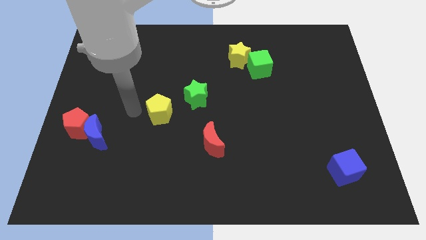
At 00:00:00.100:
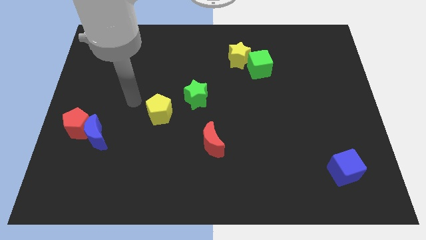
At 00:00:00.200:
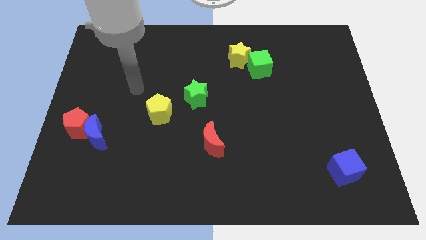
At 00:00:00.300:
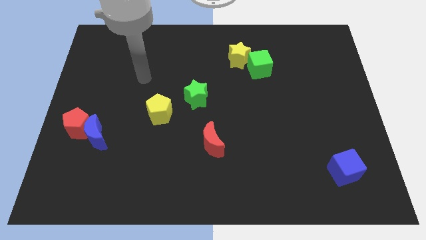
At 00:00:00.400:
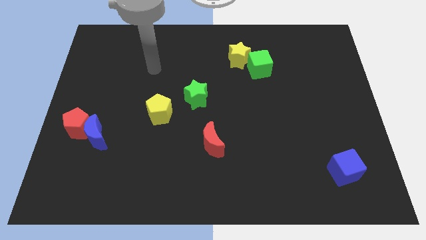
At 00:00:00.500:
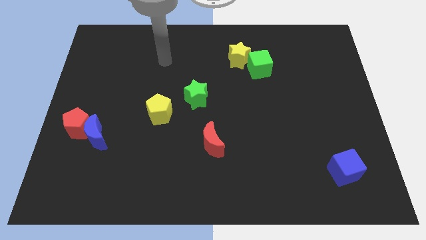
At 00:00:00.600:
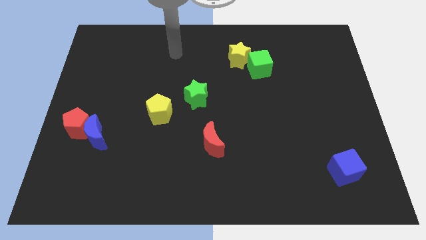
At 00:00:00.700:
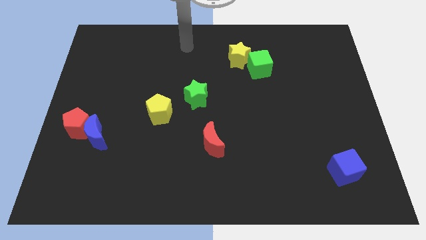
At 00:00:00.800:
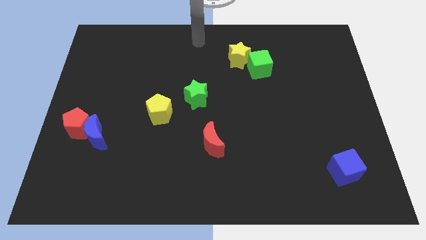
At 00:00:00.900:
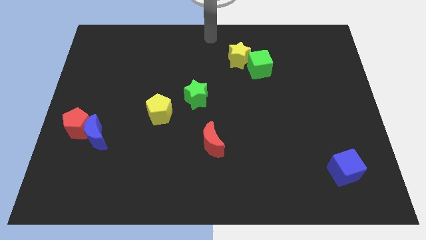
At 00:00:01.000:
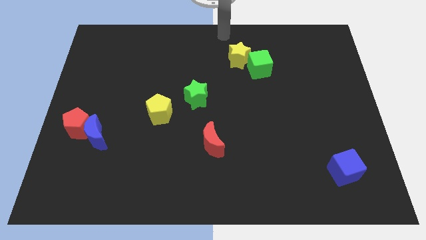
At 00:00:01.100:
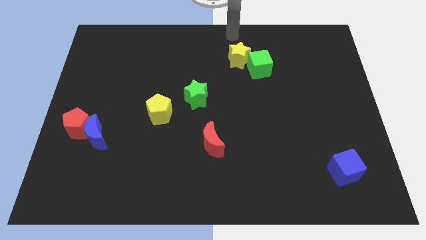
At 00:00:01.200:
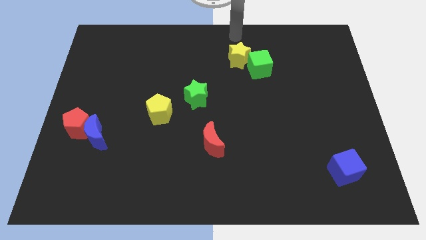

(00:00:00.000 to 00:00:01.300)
point the arm above the yellow star

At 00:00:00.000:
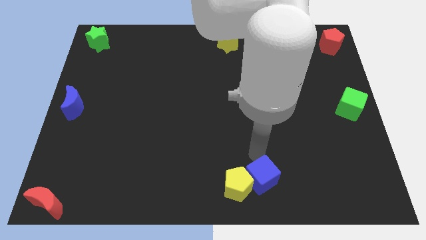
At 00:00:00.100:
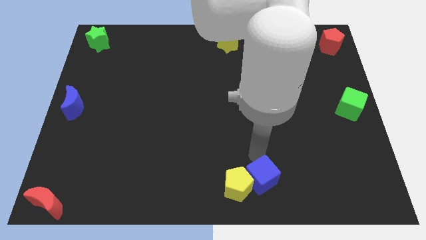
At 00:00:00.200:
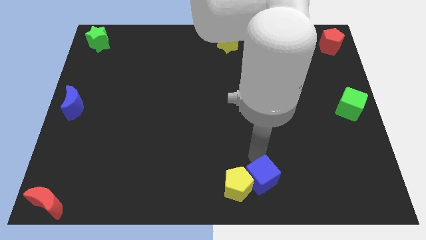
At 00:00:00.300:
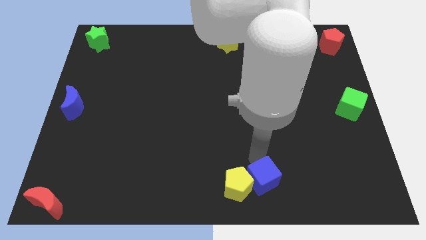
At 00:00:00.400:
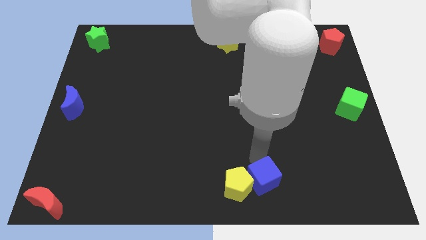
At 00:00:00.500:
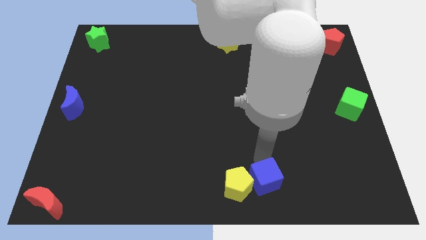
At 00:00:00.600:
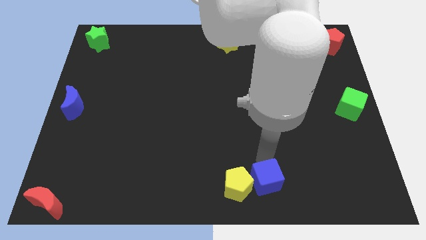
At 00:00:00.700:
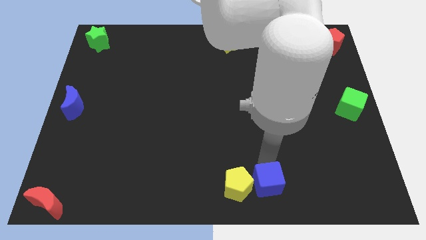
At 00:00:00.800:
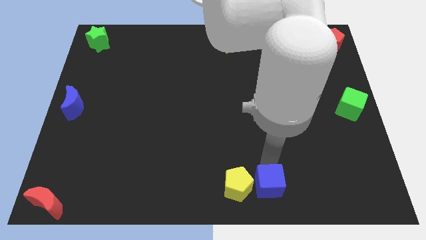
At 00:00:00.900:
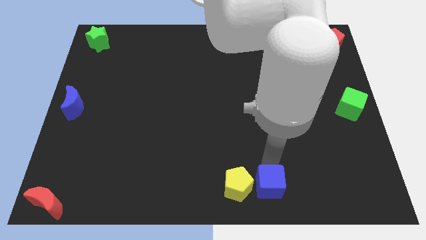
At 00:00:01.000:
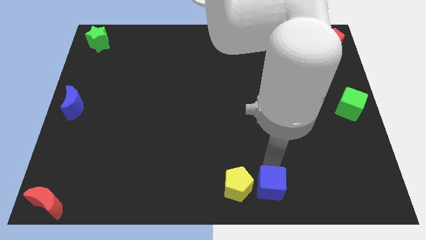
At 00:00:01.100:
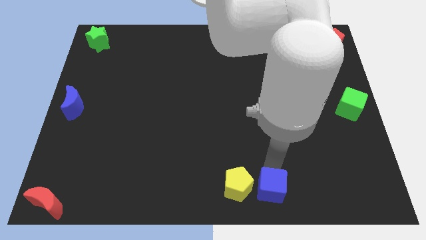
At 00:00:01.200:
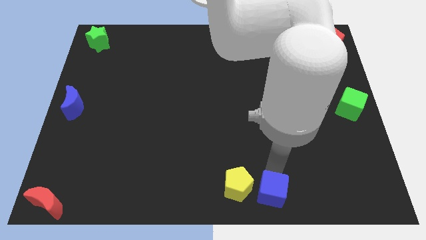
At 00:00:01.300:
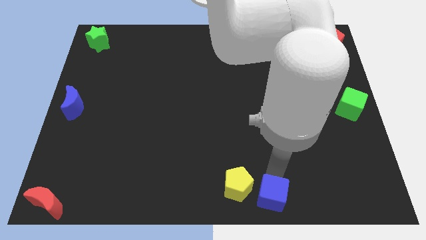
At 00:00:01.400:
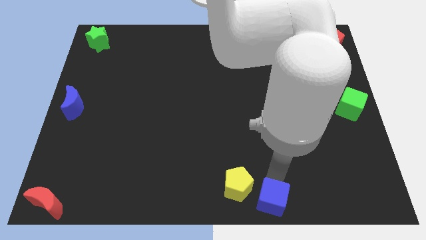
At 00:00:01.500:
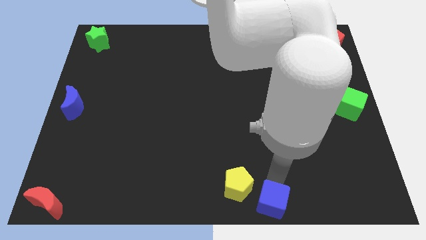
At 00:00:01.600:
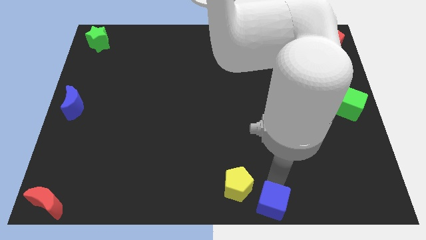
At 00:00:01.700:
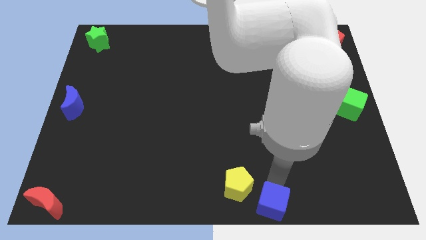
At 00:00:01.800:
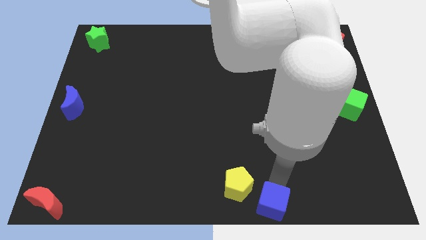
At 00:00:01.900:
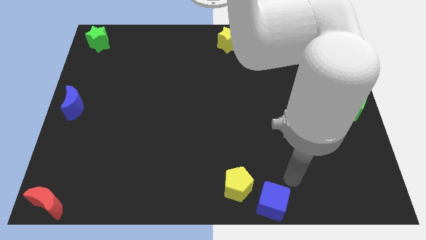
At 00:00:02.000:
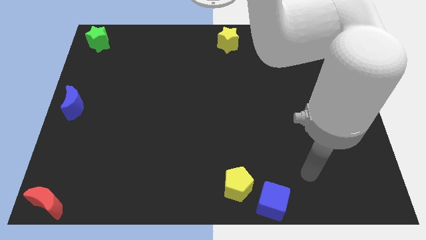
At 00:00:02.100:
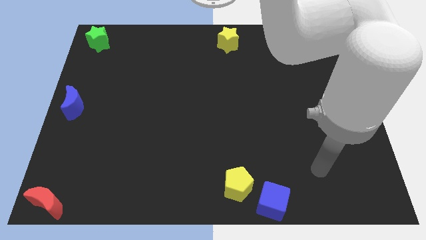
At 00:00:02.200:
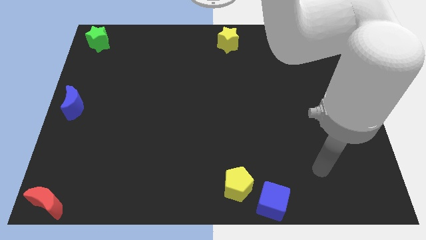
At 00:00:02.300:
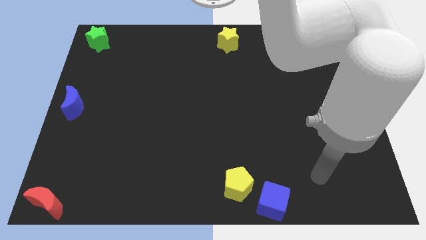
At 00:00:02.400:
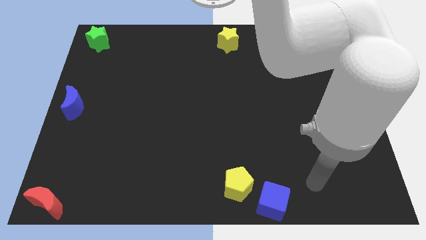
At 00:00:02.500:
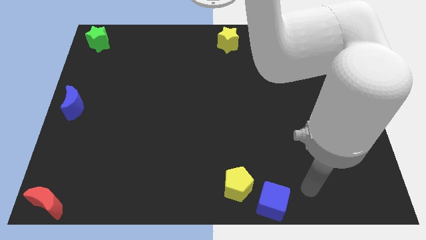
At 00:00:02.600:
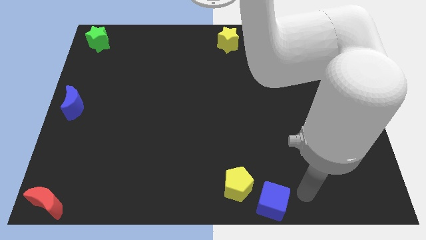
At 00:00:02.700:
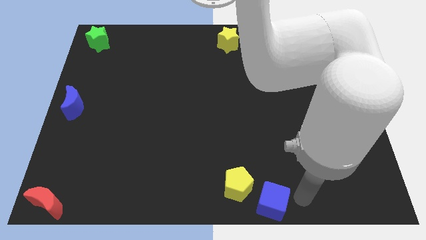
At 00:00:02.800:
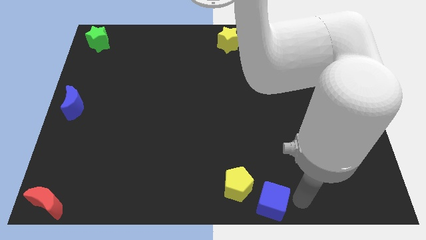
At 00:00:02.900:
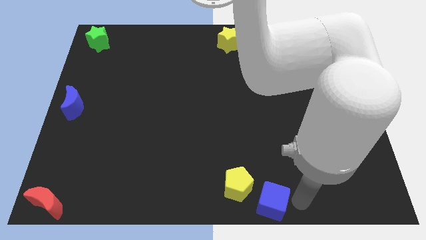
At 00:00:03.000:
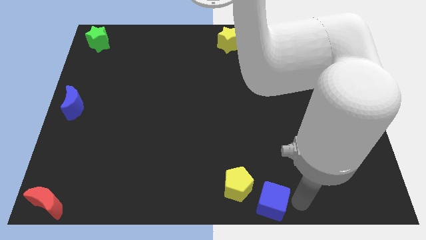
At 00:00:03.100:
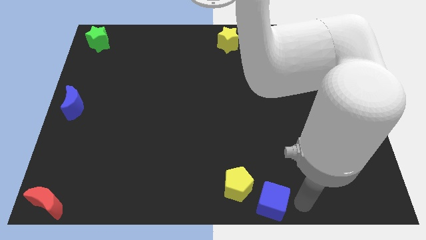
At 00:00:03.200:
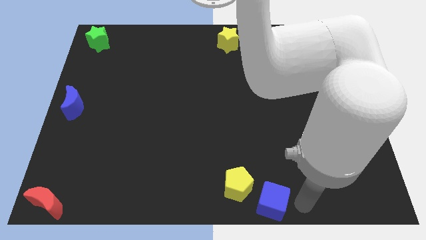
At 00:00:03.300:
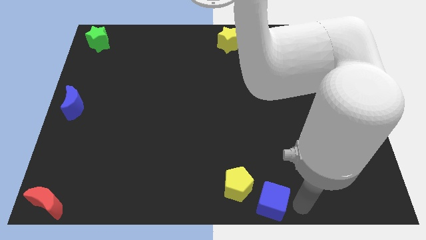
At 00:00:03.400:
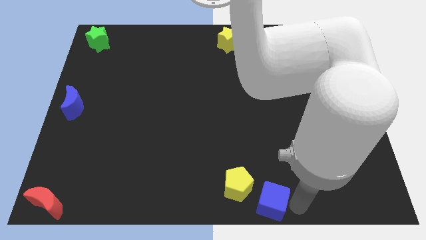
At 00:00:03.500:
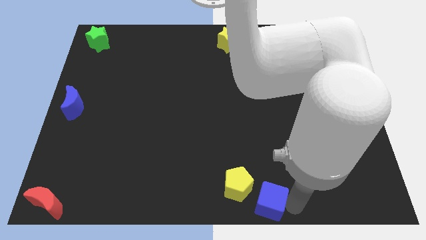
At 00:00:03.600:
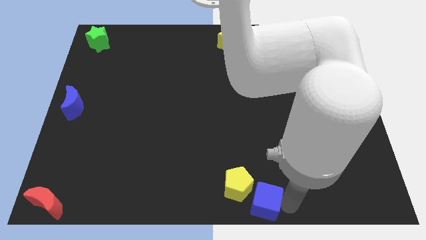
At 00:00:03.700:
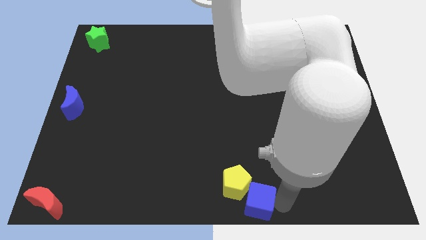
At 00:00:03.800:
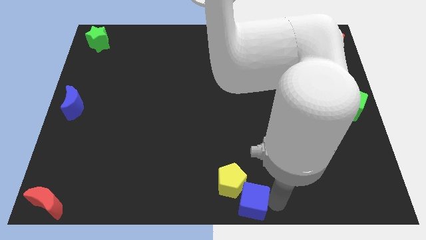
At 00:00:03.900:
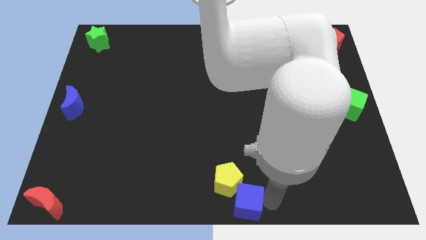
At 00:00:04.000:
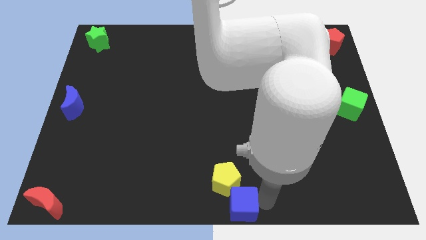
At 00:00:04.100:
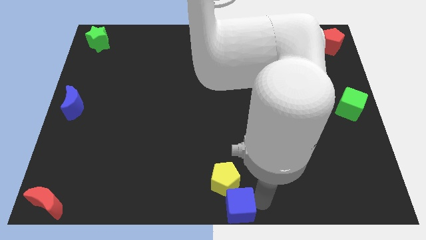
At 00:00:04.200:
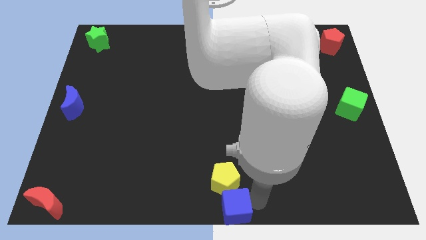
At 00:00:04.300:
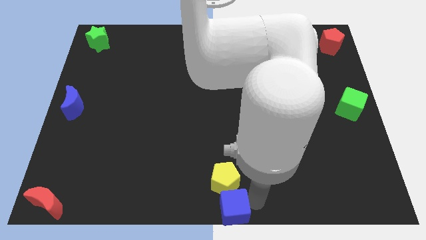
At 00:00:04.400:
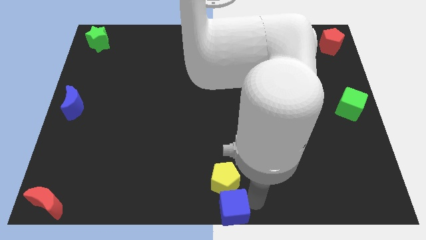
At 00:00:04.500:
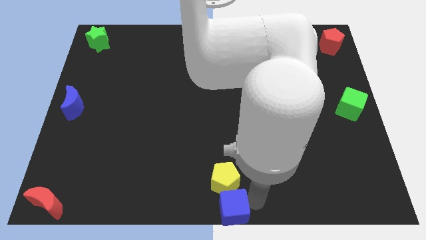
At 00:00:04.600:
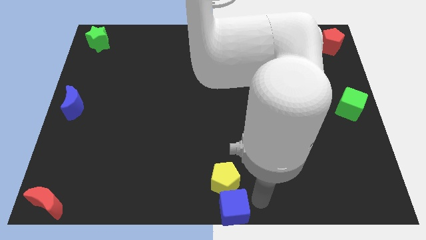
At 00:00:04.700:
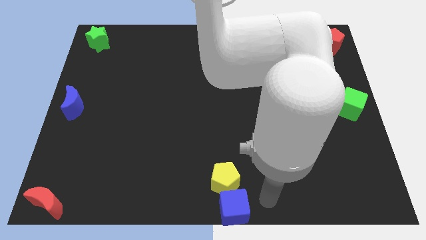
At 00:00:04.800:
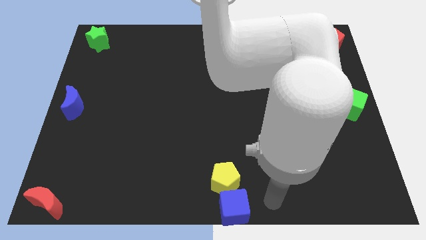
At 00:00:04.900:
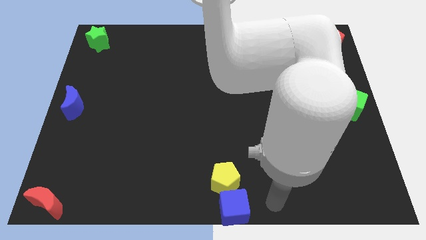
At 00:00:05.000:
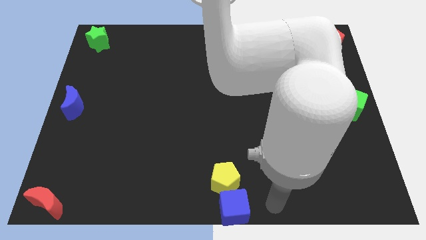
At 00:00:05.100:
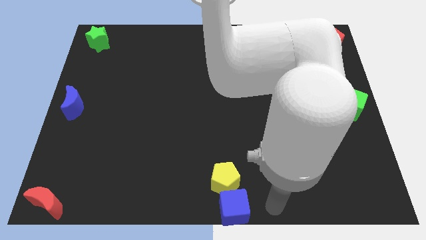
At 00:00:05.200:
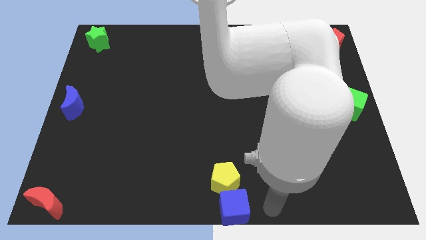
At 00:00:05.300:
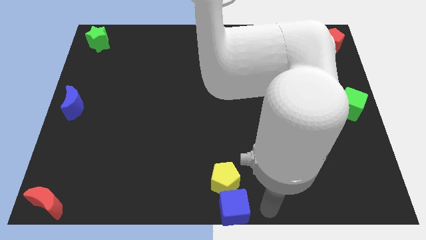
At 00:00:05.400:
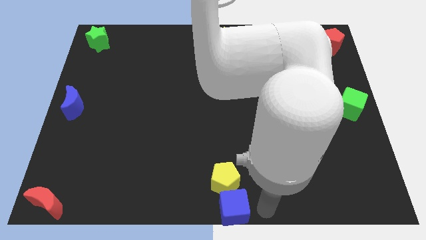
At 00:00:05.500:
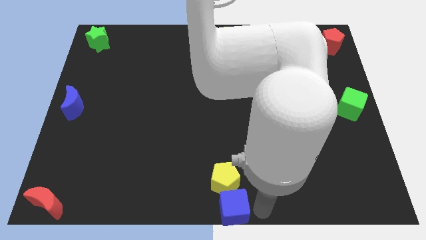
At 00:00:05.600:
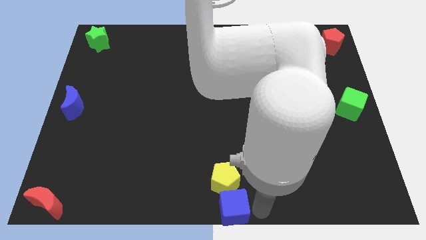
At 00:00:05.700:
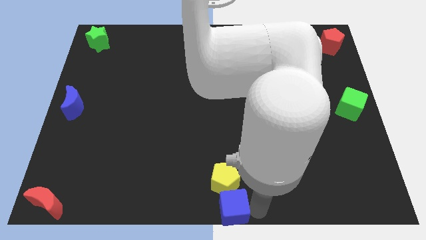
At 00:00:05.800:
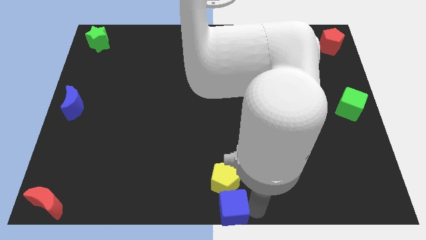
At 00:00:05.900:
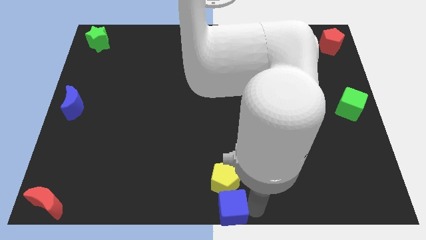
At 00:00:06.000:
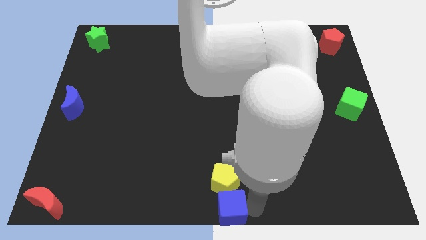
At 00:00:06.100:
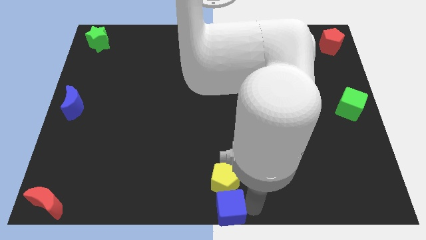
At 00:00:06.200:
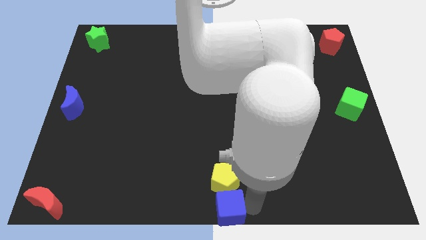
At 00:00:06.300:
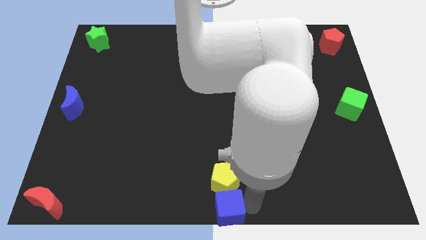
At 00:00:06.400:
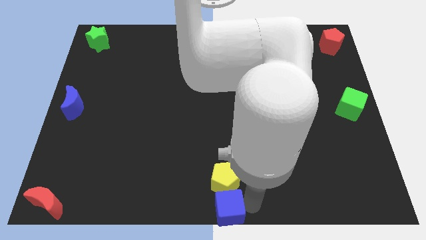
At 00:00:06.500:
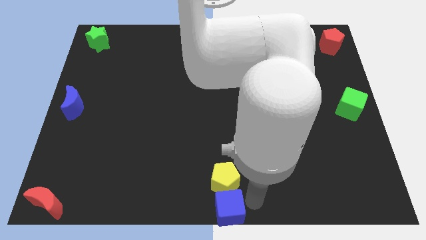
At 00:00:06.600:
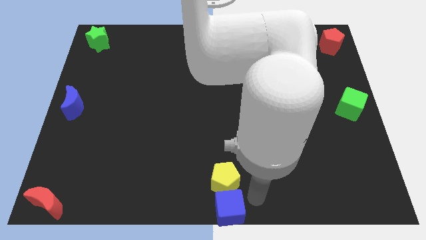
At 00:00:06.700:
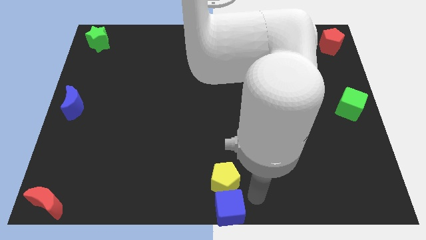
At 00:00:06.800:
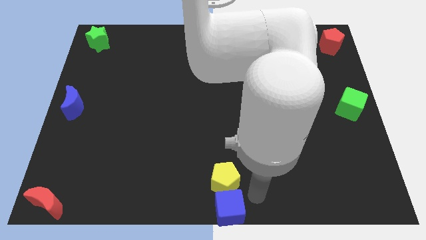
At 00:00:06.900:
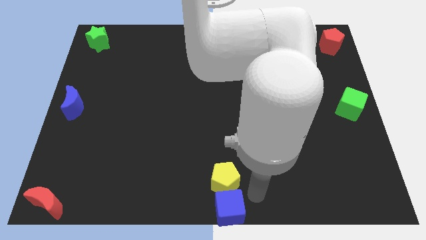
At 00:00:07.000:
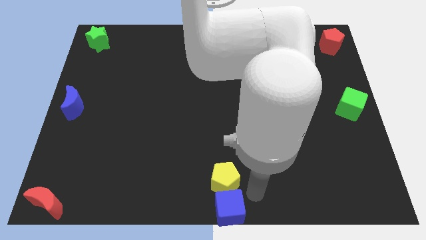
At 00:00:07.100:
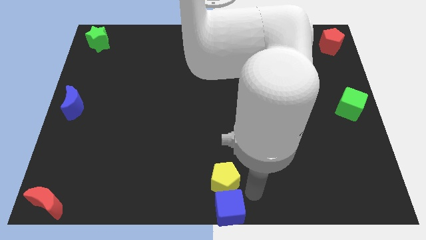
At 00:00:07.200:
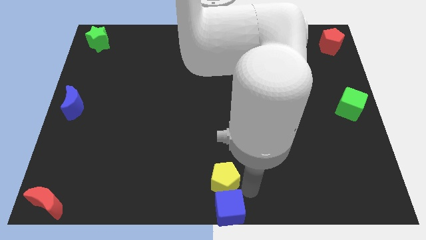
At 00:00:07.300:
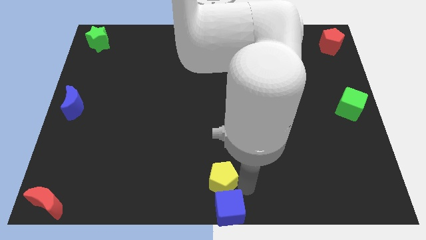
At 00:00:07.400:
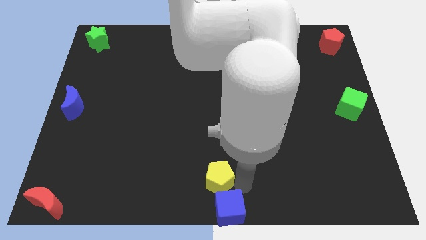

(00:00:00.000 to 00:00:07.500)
place the blue cube on the bottom center of the board
